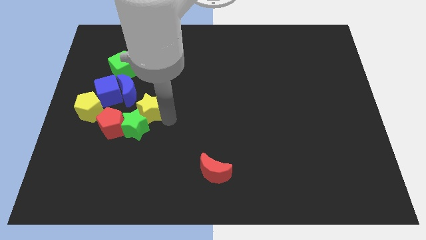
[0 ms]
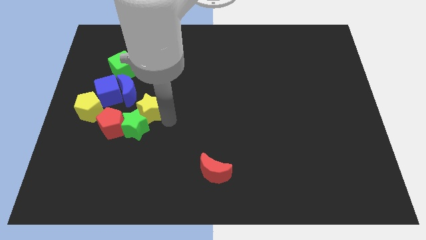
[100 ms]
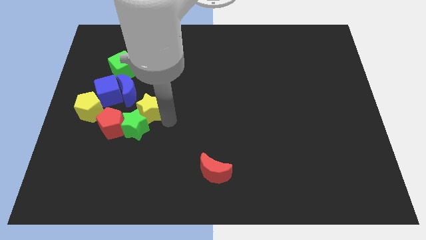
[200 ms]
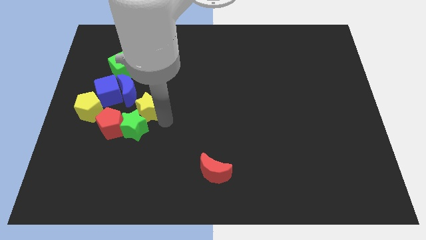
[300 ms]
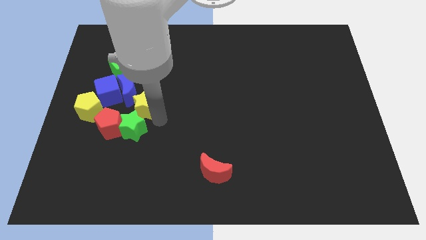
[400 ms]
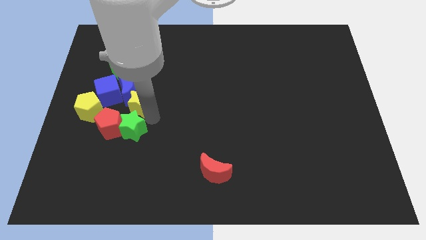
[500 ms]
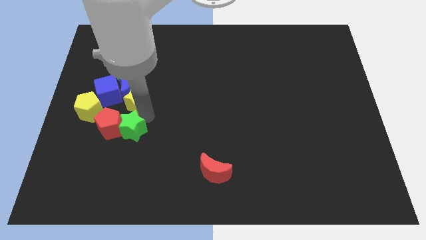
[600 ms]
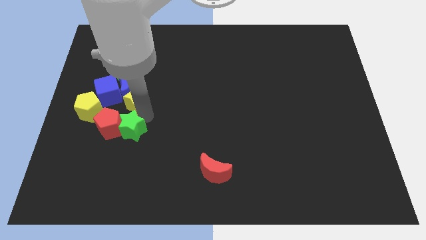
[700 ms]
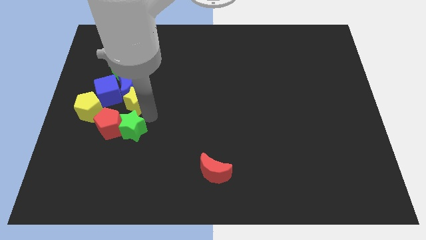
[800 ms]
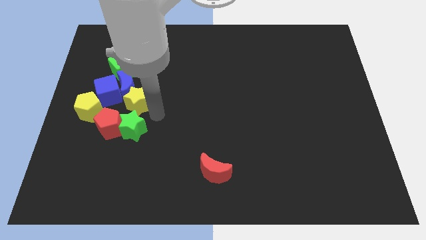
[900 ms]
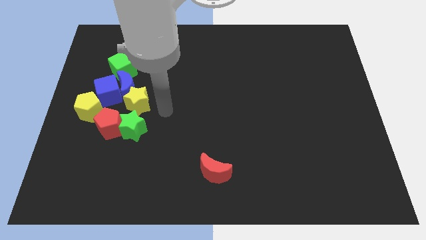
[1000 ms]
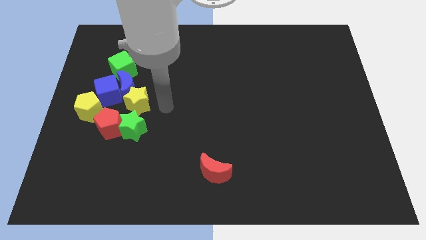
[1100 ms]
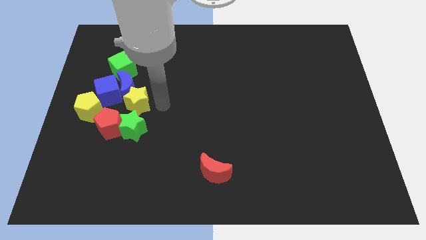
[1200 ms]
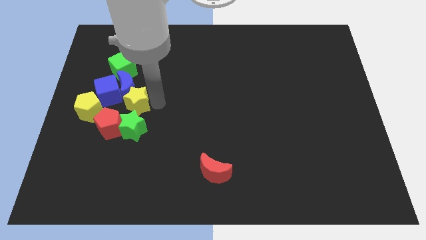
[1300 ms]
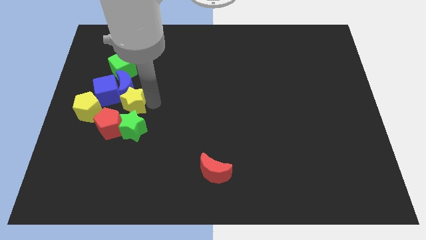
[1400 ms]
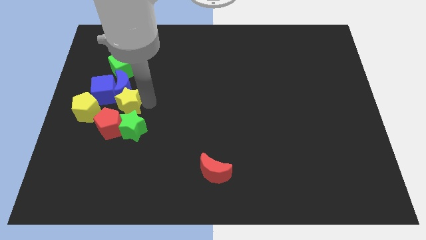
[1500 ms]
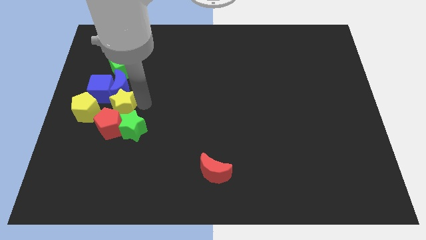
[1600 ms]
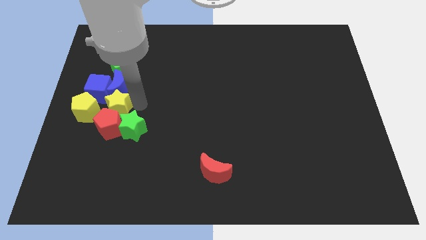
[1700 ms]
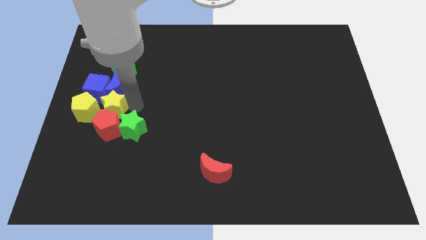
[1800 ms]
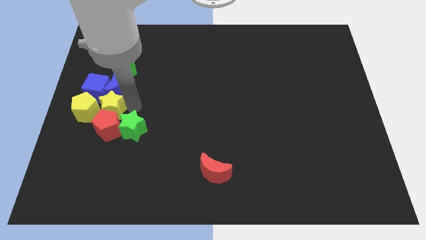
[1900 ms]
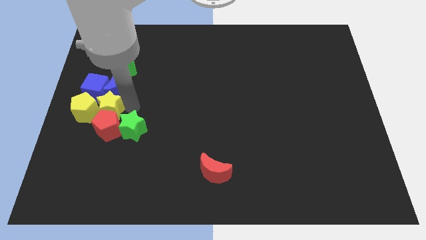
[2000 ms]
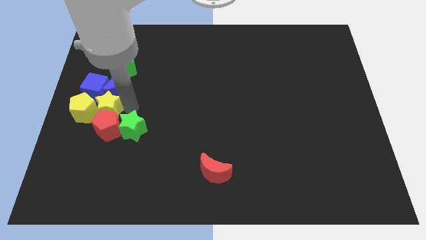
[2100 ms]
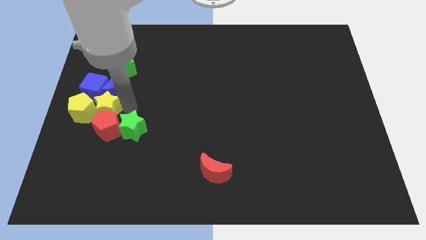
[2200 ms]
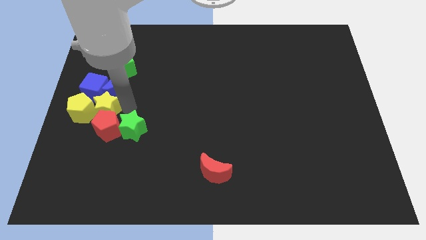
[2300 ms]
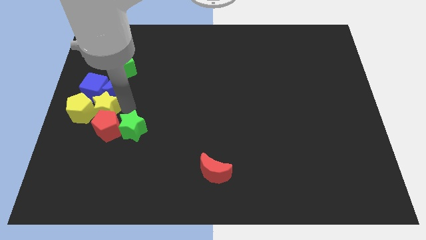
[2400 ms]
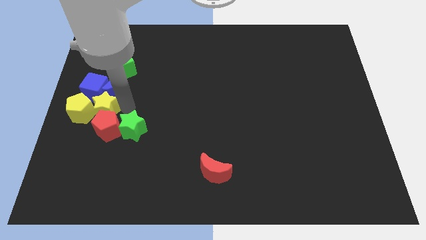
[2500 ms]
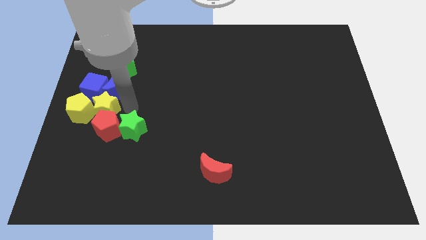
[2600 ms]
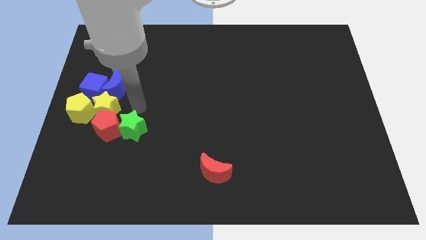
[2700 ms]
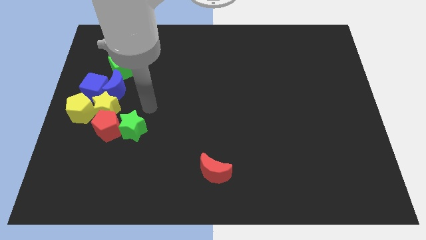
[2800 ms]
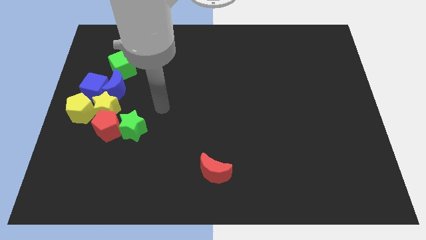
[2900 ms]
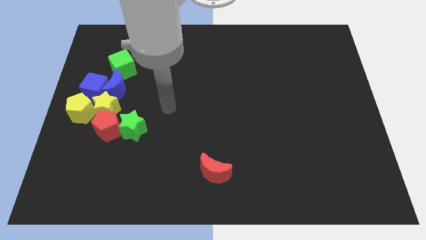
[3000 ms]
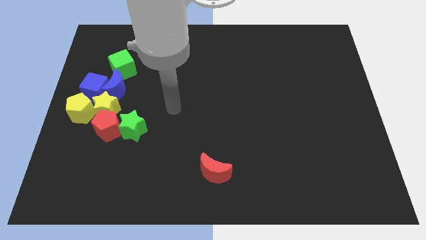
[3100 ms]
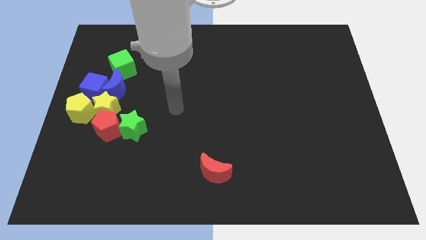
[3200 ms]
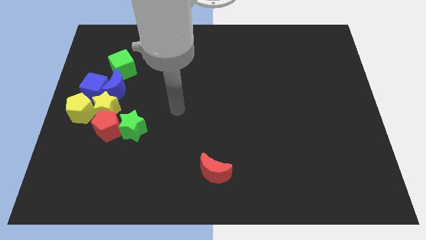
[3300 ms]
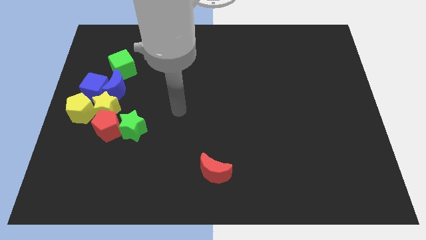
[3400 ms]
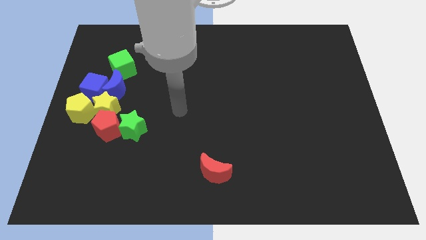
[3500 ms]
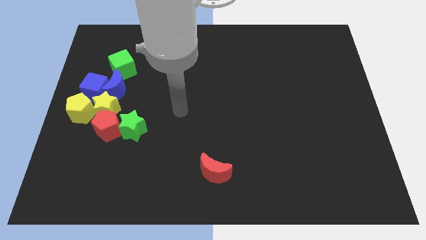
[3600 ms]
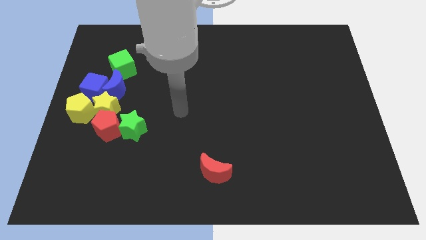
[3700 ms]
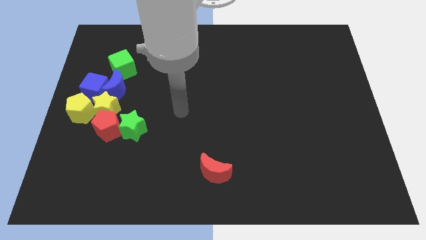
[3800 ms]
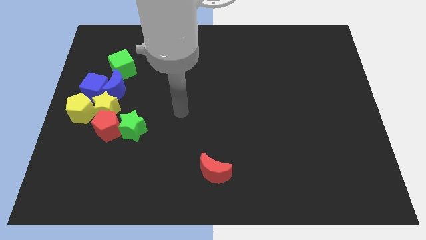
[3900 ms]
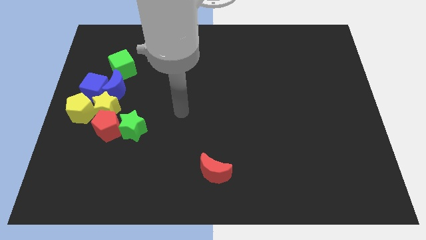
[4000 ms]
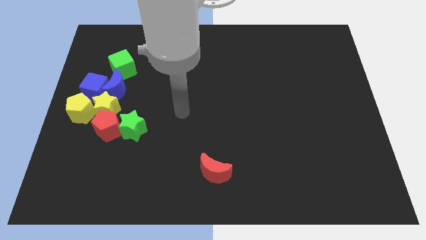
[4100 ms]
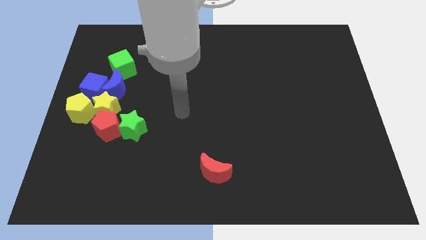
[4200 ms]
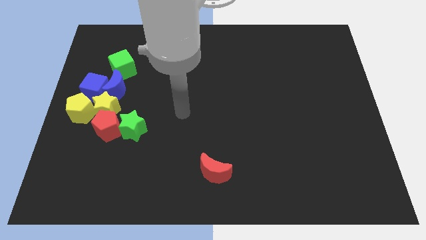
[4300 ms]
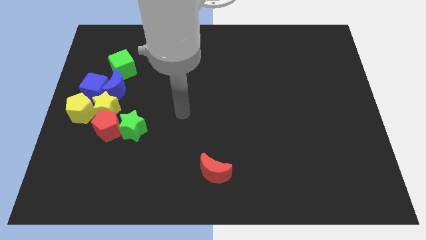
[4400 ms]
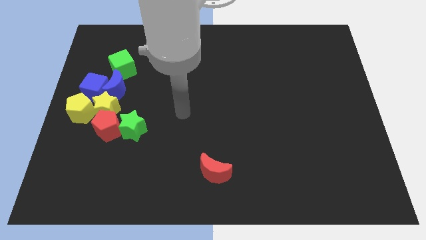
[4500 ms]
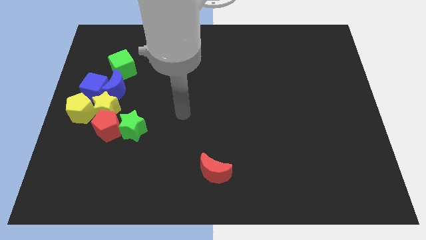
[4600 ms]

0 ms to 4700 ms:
slide the yellow star into the yellow pentagon

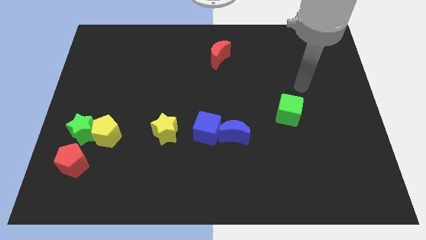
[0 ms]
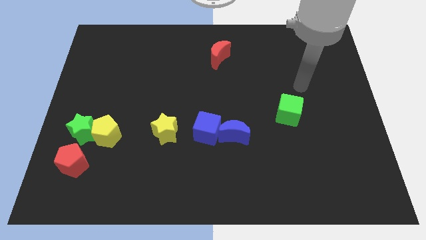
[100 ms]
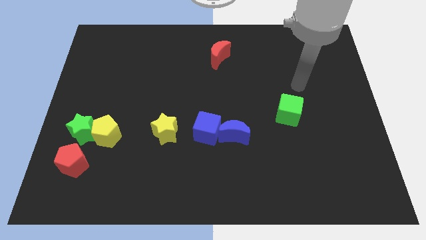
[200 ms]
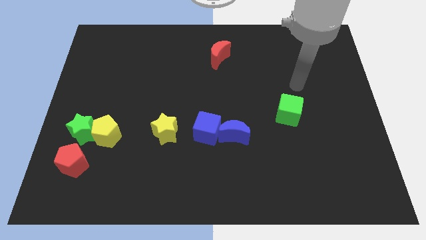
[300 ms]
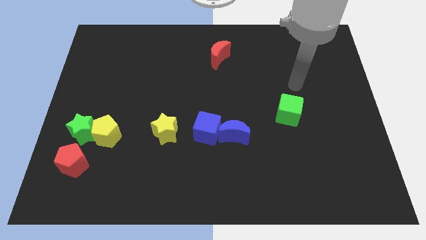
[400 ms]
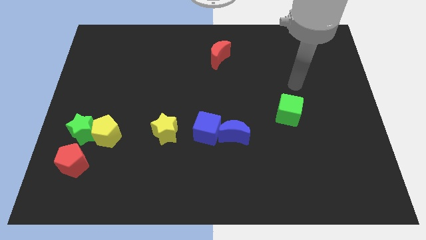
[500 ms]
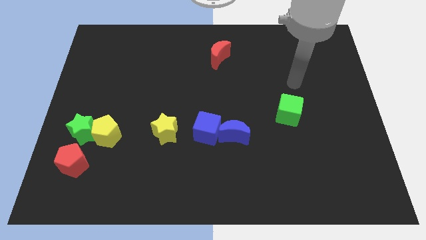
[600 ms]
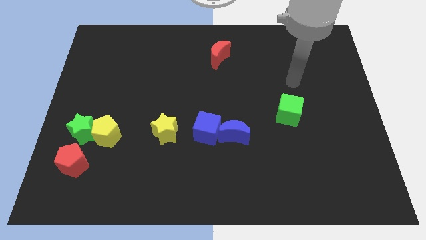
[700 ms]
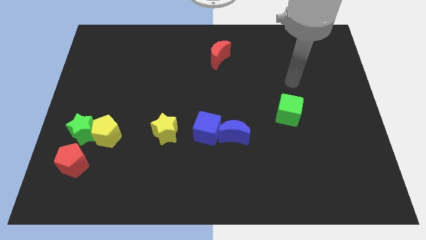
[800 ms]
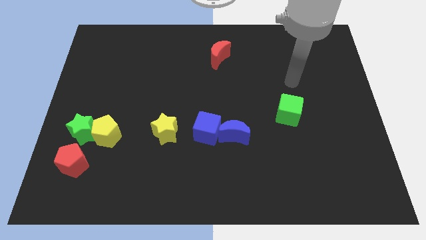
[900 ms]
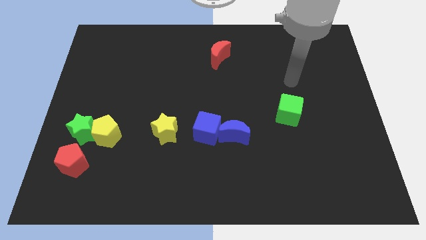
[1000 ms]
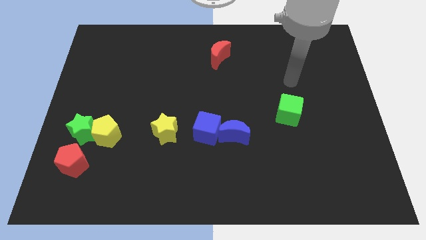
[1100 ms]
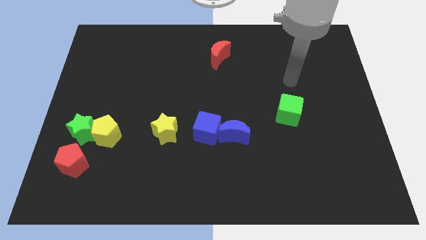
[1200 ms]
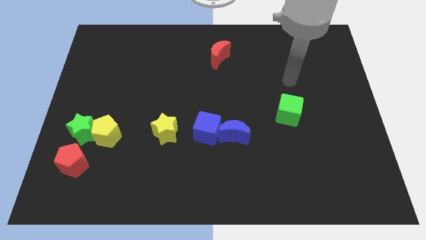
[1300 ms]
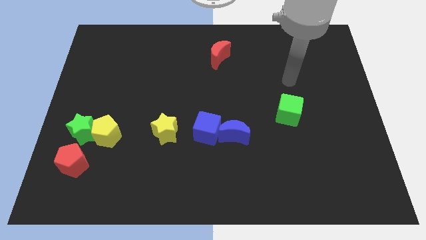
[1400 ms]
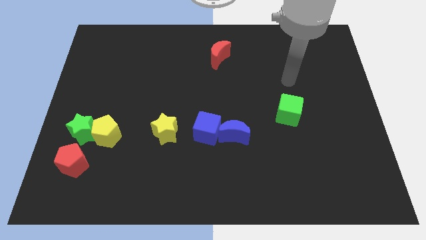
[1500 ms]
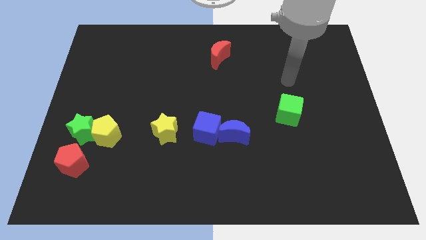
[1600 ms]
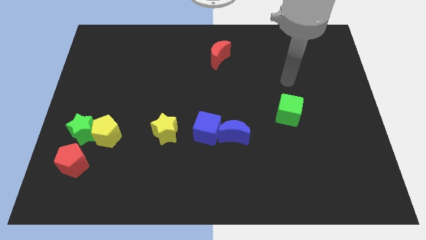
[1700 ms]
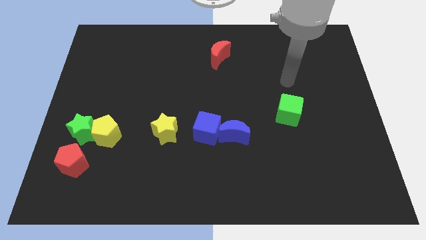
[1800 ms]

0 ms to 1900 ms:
point your arm on top of green cube

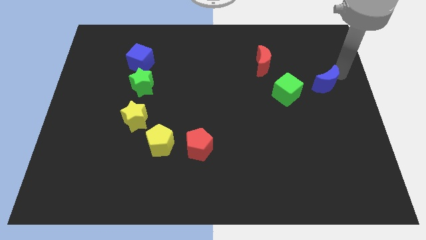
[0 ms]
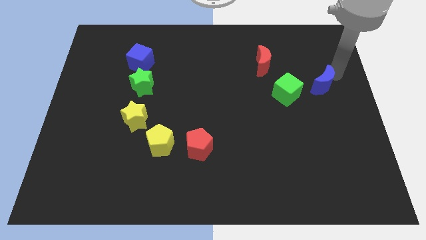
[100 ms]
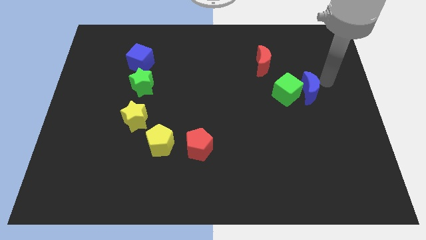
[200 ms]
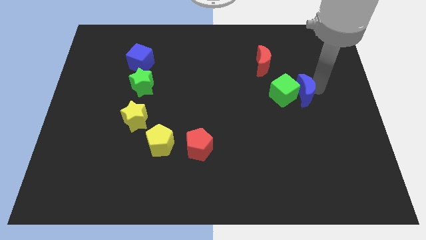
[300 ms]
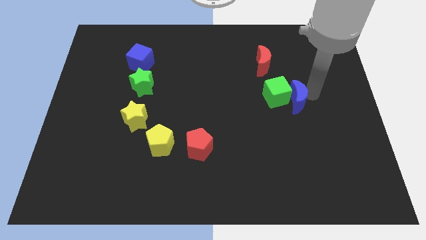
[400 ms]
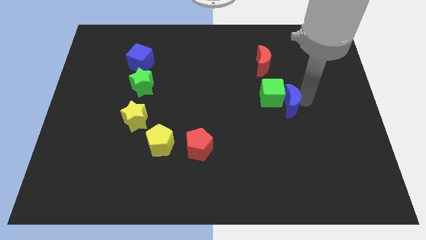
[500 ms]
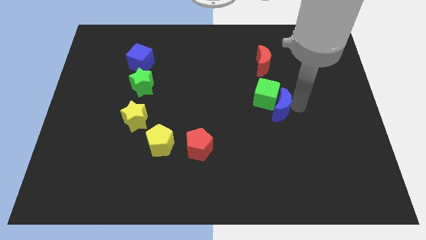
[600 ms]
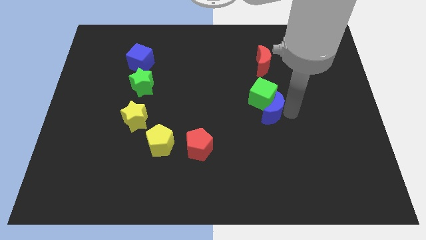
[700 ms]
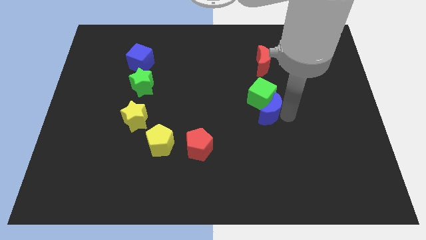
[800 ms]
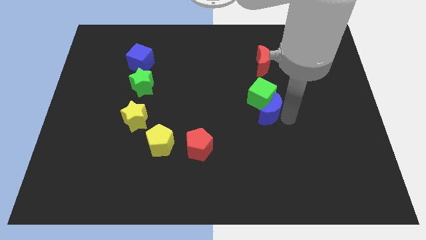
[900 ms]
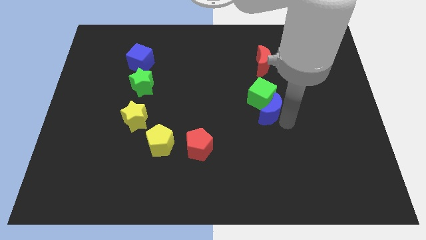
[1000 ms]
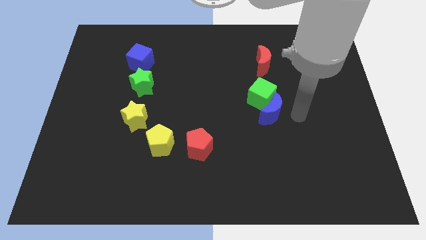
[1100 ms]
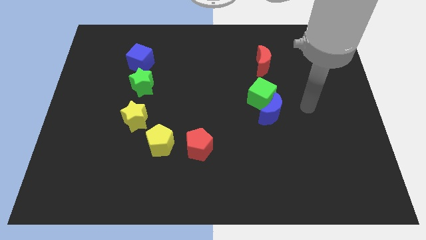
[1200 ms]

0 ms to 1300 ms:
slide blue moon into the green cube

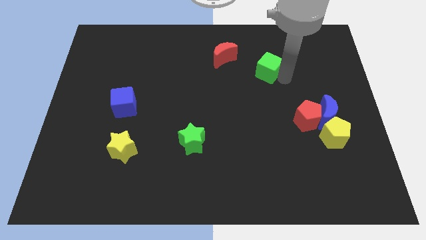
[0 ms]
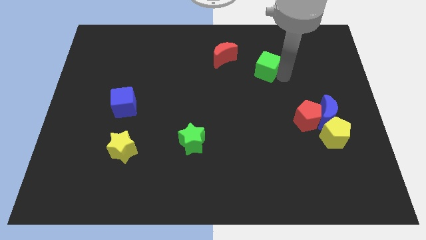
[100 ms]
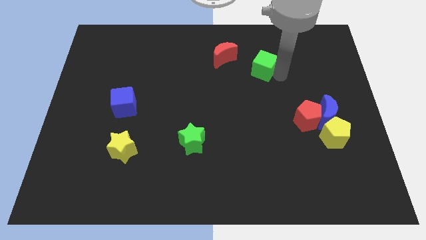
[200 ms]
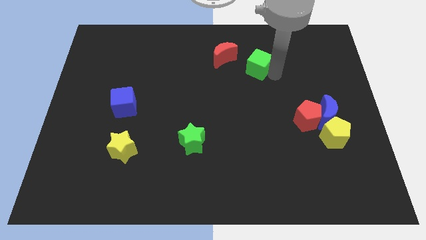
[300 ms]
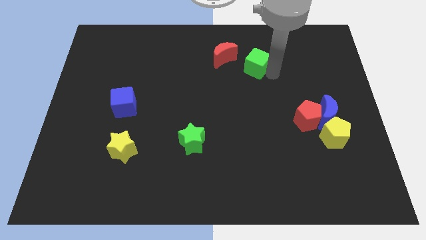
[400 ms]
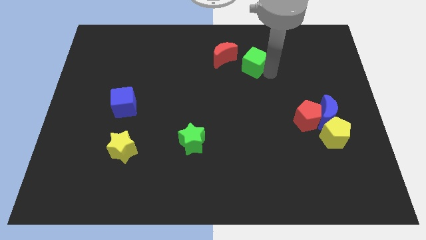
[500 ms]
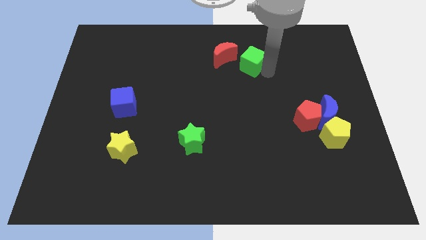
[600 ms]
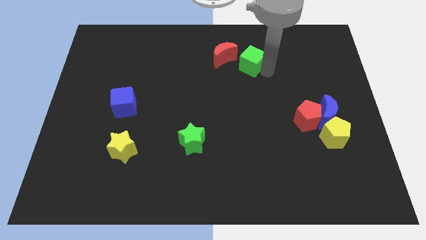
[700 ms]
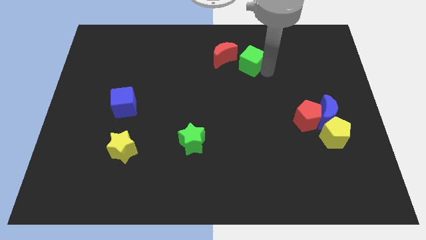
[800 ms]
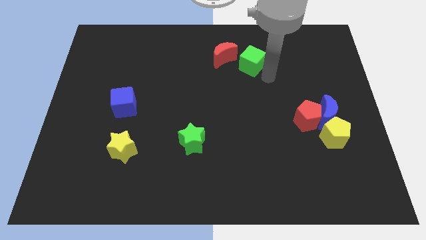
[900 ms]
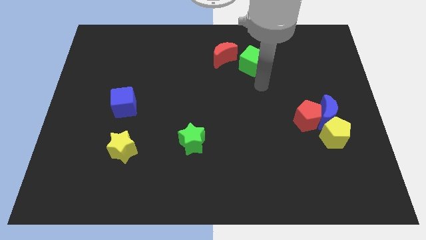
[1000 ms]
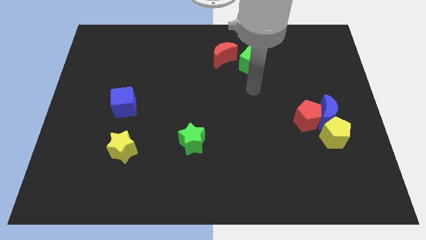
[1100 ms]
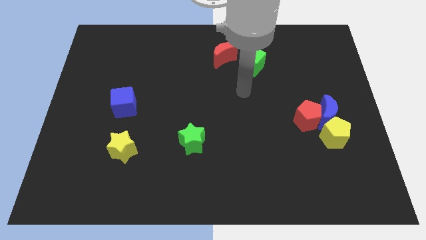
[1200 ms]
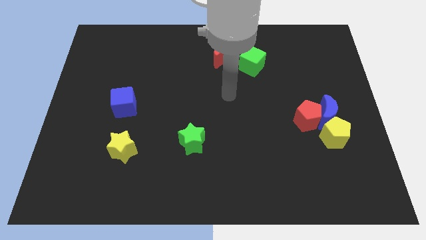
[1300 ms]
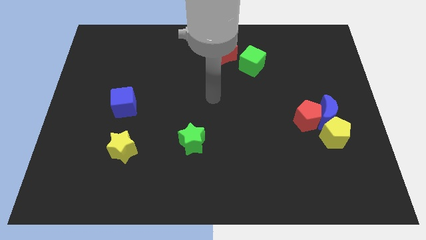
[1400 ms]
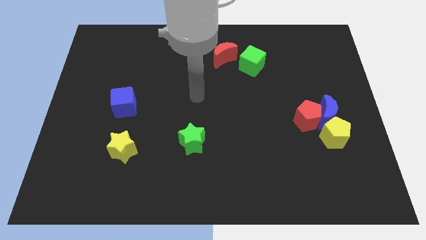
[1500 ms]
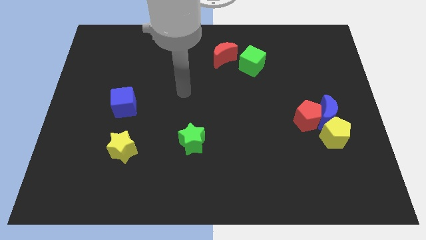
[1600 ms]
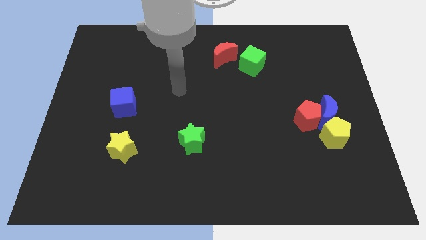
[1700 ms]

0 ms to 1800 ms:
place the green cube diagonally to the top right of the green star
